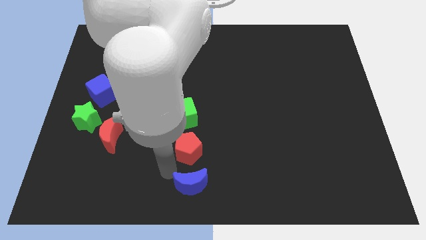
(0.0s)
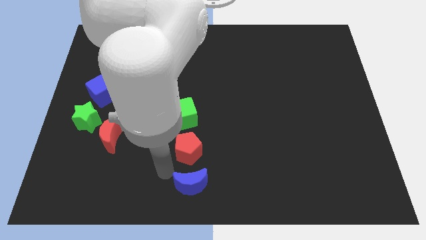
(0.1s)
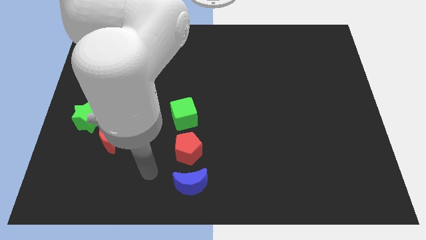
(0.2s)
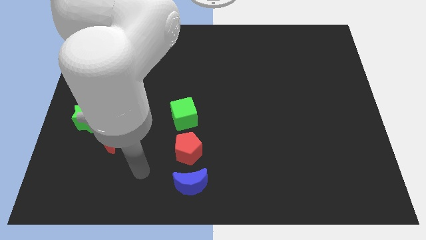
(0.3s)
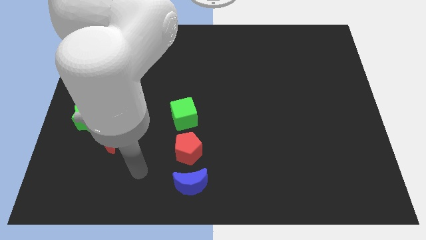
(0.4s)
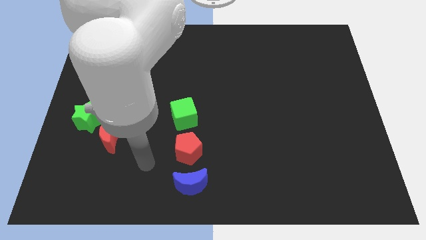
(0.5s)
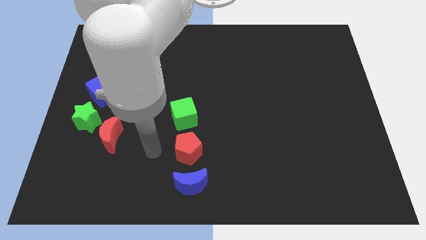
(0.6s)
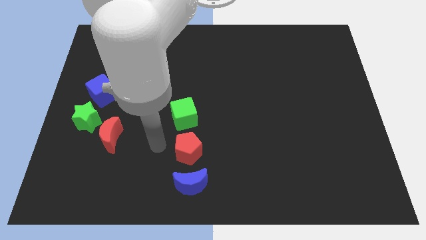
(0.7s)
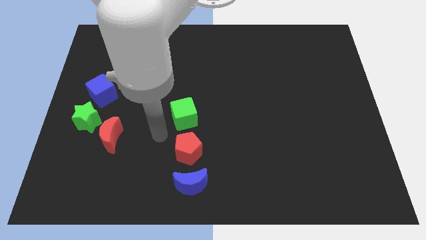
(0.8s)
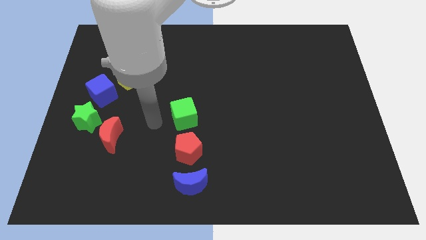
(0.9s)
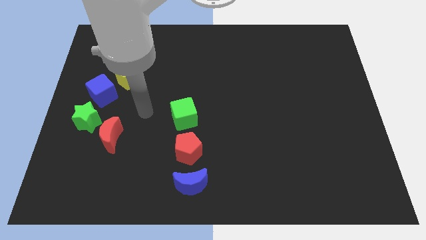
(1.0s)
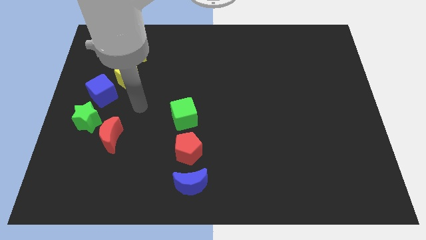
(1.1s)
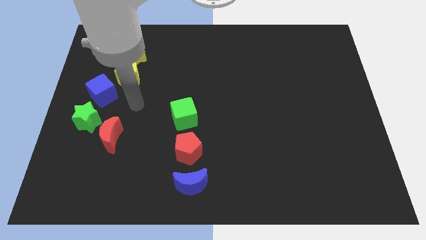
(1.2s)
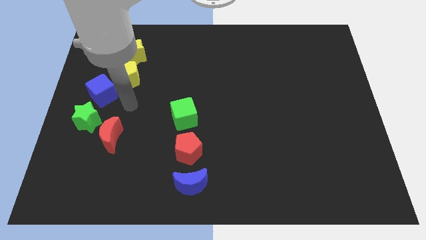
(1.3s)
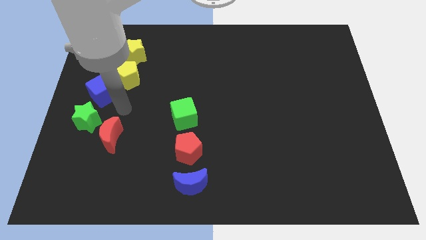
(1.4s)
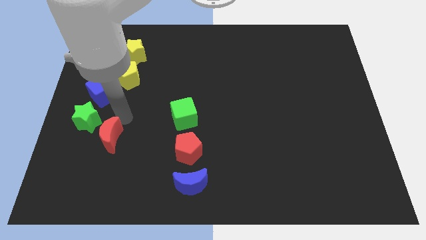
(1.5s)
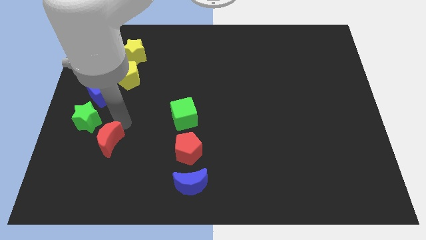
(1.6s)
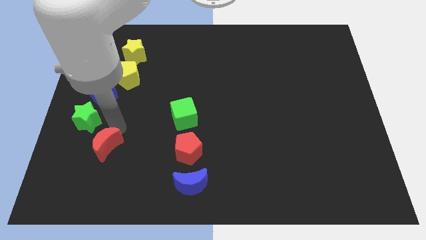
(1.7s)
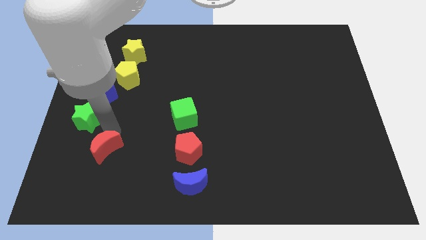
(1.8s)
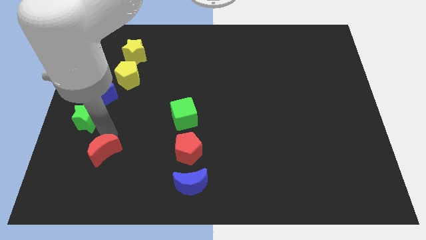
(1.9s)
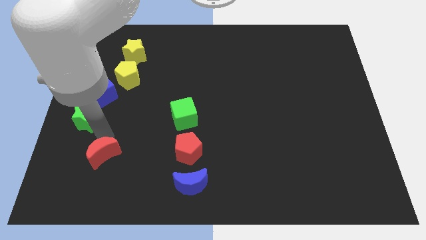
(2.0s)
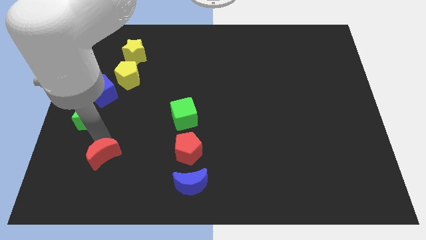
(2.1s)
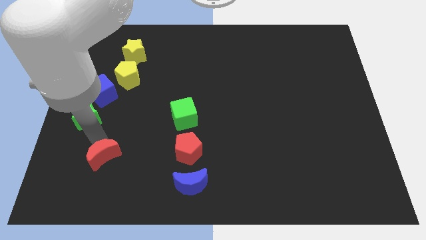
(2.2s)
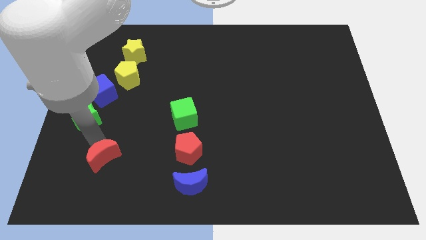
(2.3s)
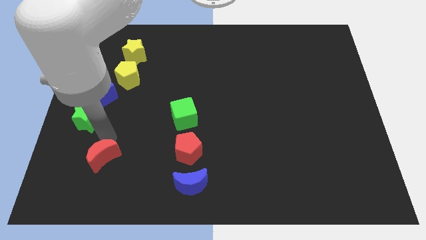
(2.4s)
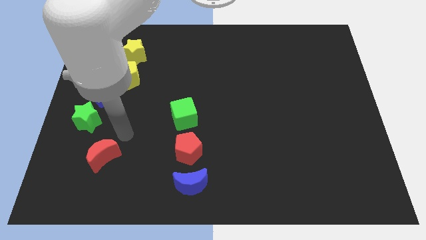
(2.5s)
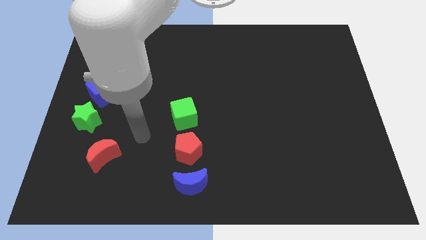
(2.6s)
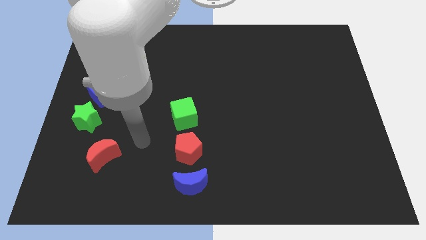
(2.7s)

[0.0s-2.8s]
push the red crescent towards the bottom side of the board

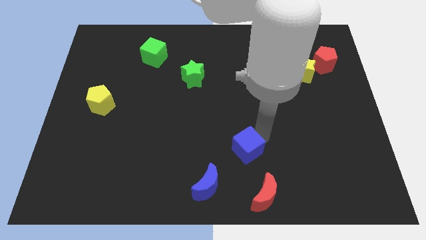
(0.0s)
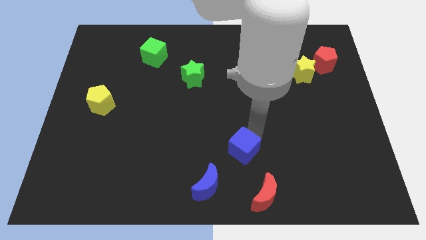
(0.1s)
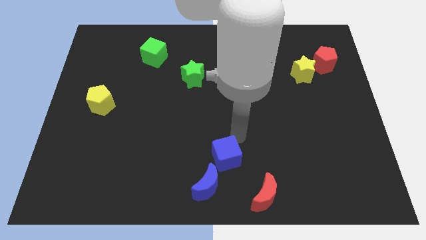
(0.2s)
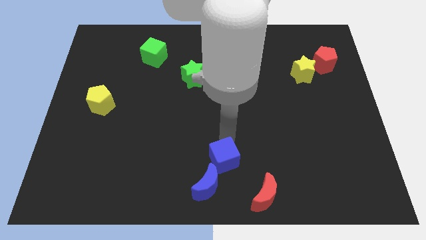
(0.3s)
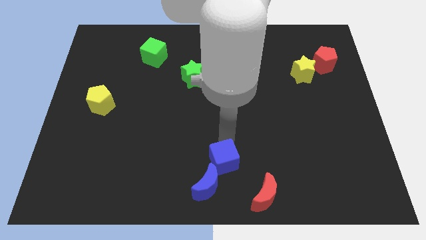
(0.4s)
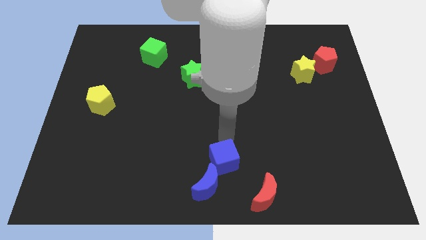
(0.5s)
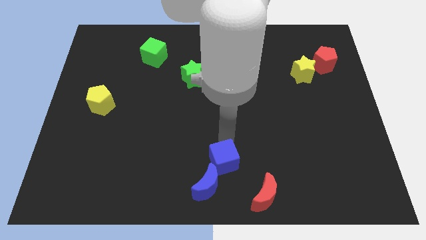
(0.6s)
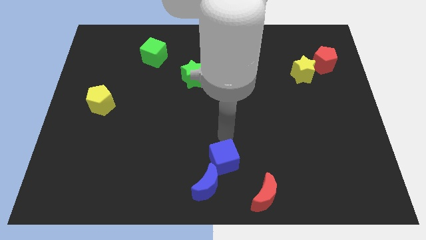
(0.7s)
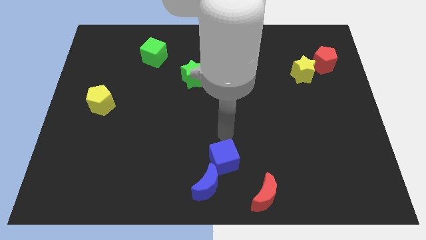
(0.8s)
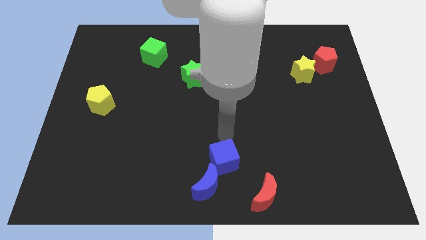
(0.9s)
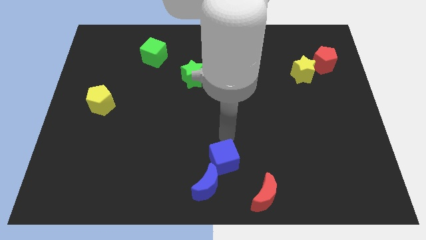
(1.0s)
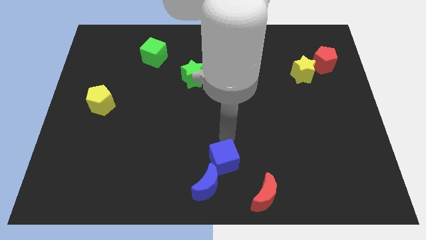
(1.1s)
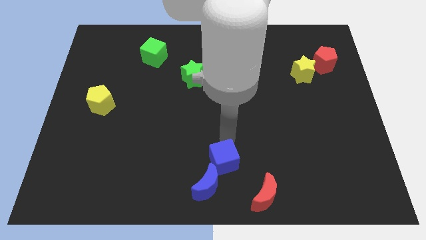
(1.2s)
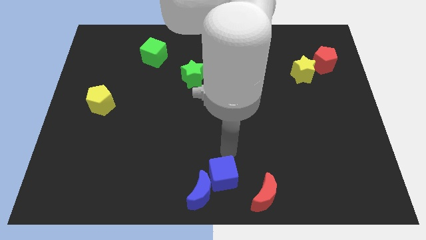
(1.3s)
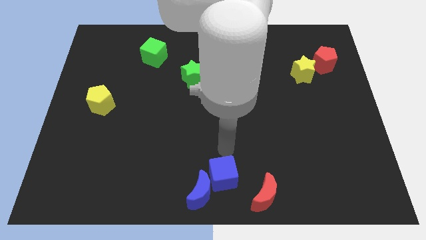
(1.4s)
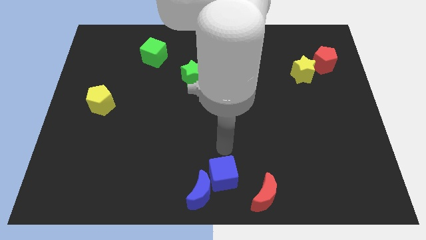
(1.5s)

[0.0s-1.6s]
push the blue cube to the right of the blue crescent

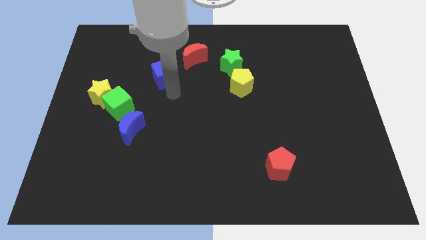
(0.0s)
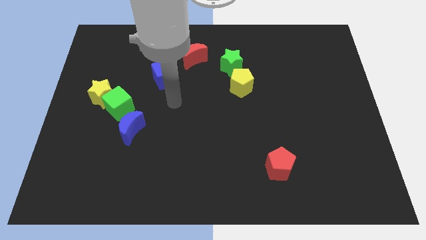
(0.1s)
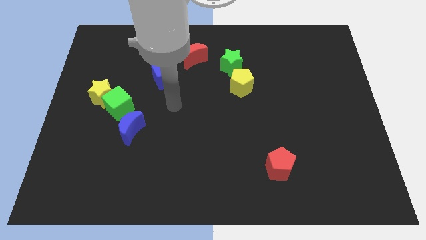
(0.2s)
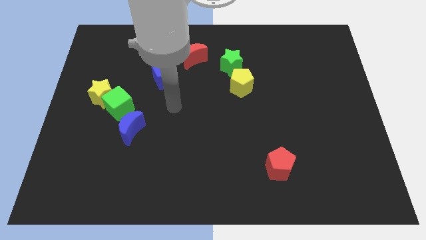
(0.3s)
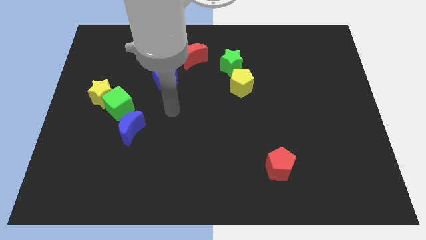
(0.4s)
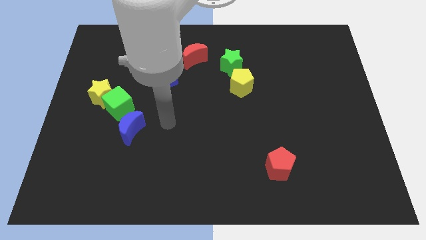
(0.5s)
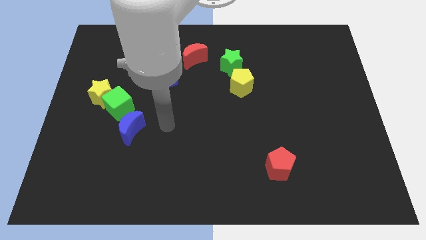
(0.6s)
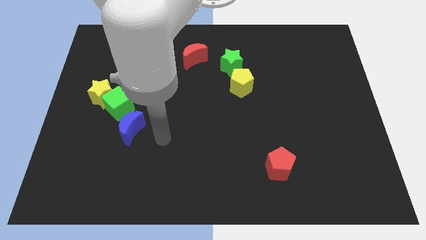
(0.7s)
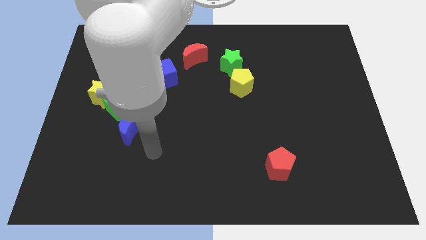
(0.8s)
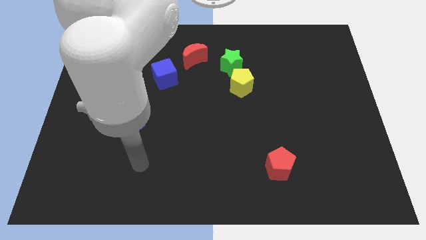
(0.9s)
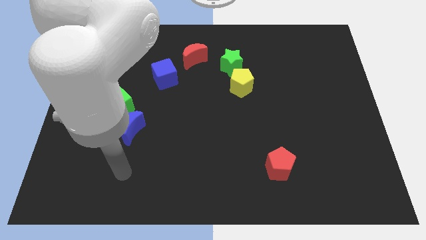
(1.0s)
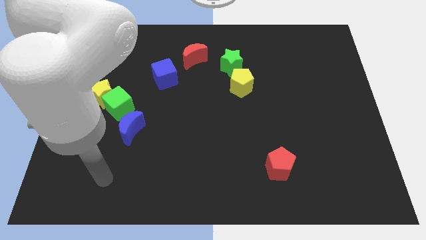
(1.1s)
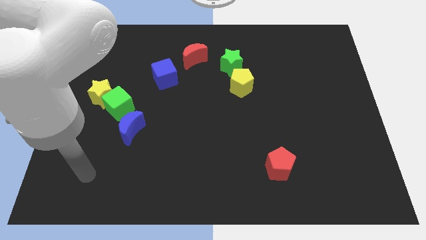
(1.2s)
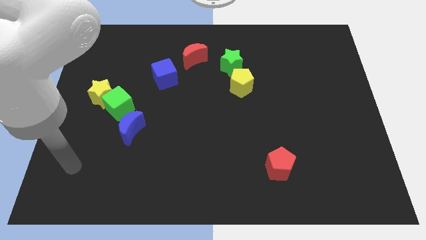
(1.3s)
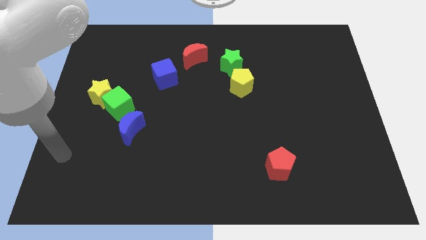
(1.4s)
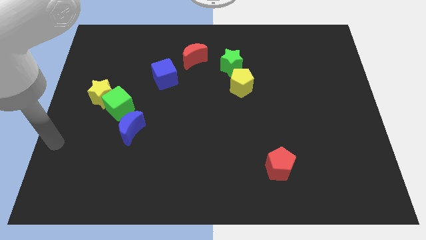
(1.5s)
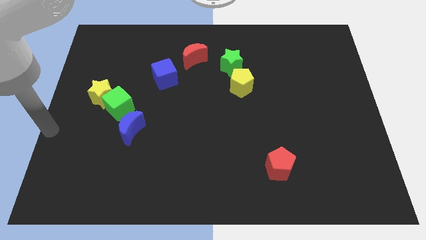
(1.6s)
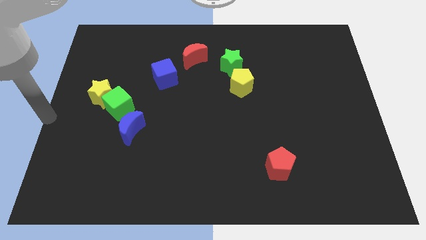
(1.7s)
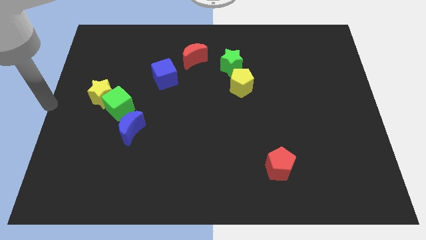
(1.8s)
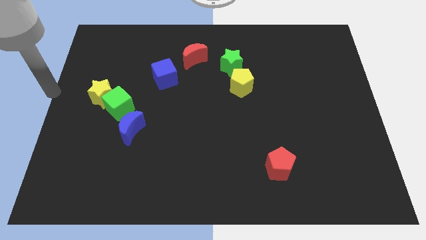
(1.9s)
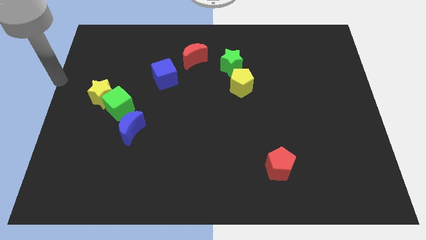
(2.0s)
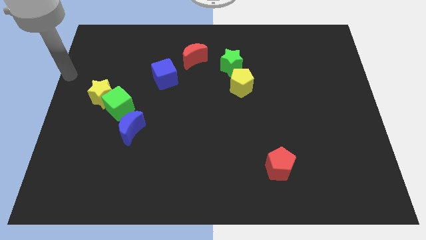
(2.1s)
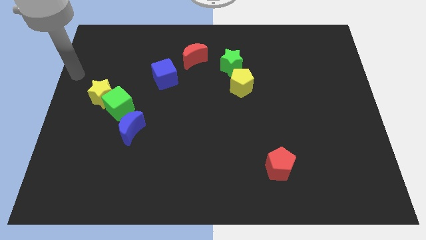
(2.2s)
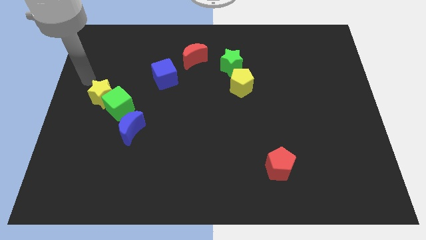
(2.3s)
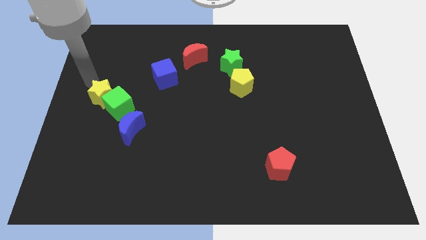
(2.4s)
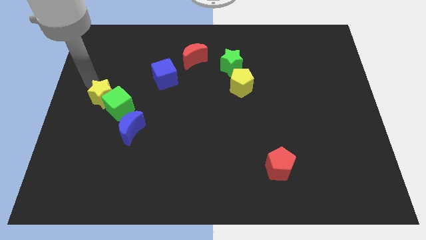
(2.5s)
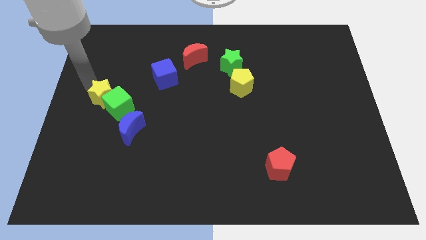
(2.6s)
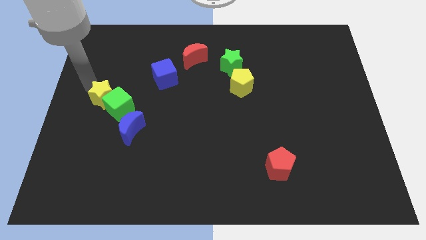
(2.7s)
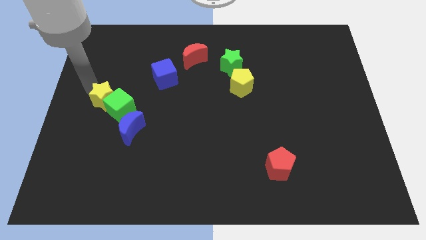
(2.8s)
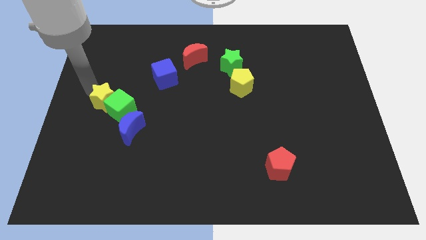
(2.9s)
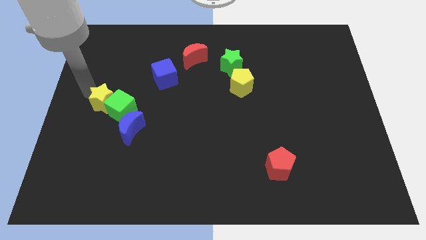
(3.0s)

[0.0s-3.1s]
push the yellow star slightly to the green cube

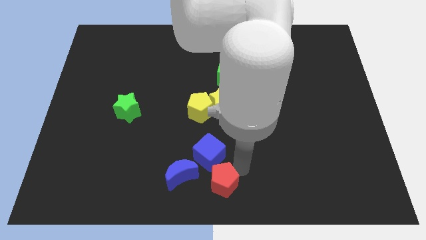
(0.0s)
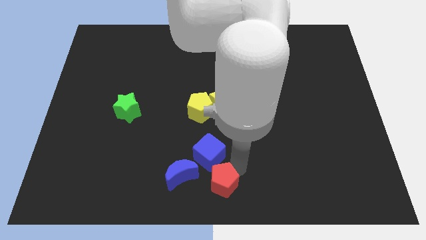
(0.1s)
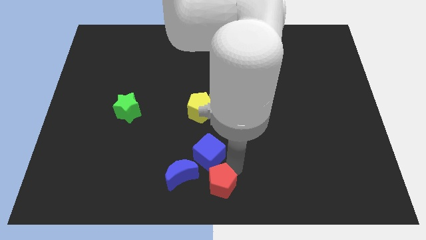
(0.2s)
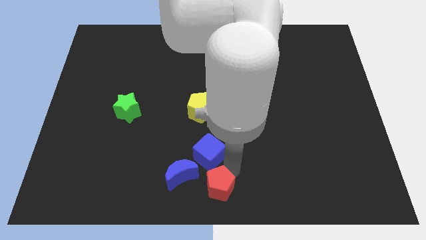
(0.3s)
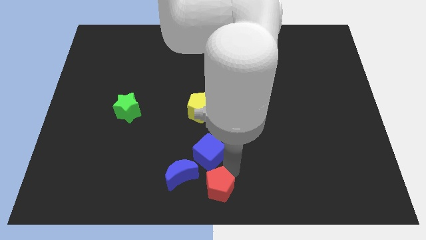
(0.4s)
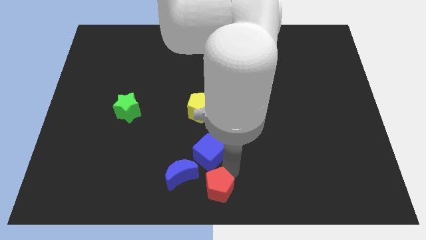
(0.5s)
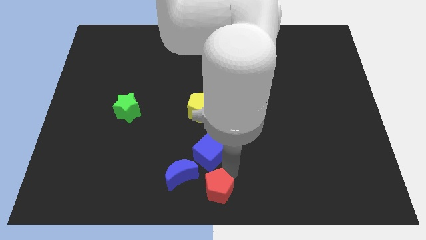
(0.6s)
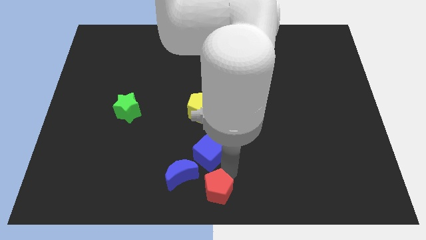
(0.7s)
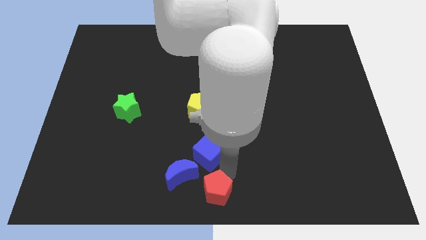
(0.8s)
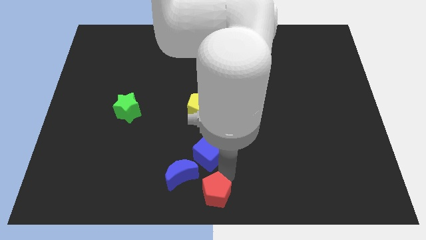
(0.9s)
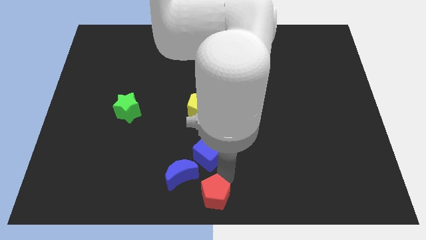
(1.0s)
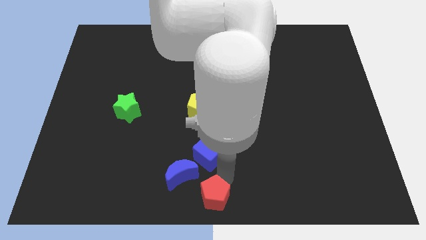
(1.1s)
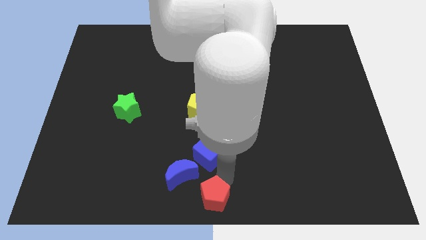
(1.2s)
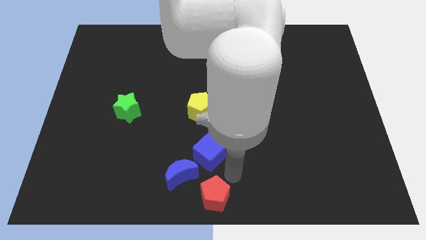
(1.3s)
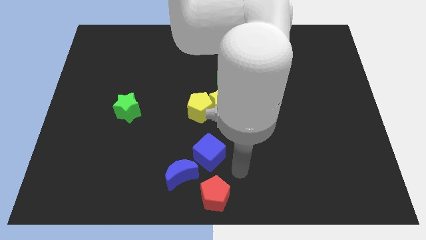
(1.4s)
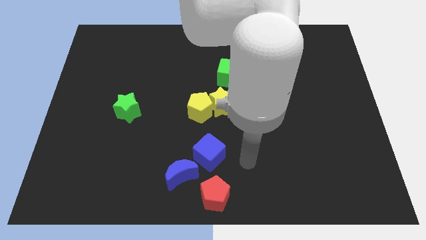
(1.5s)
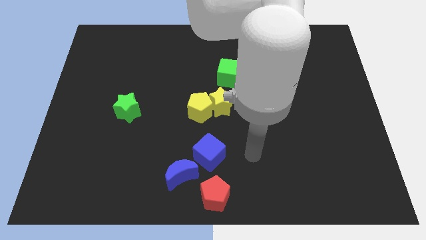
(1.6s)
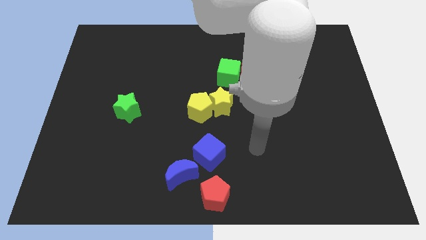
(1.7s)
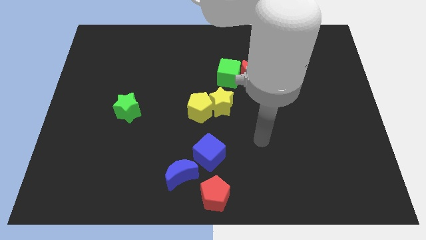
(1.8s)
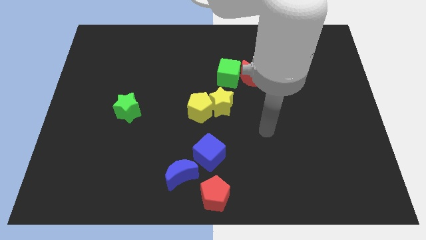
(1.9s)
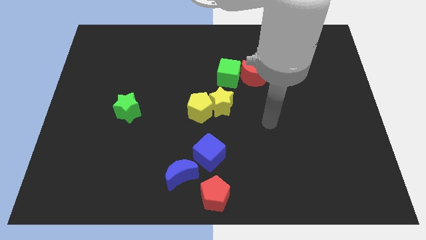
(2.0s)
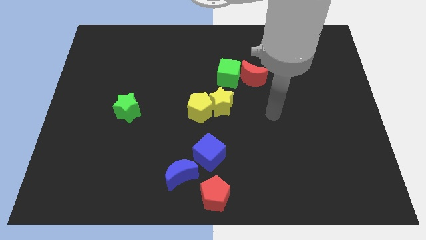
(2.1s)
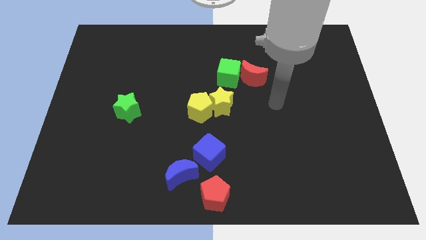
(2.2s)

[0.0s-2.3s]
place the red pentagon at the bottom center of the board
